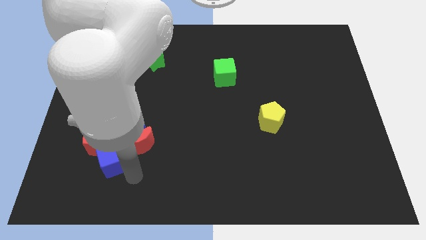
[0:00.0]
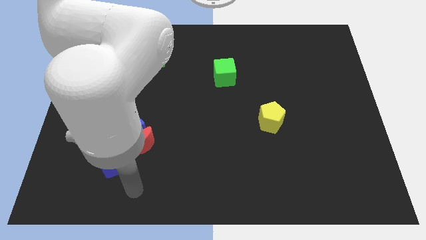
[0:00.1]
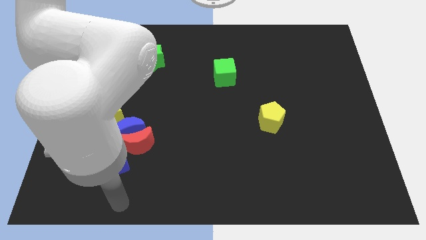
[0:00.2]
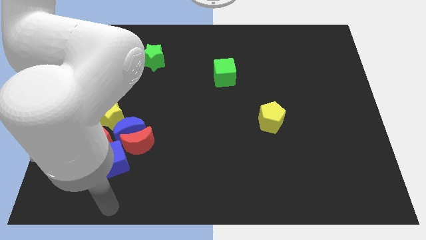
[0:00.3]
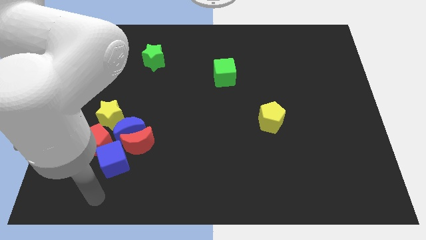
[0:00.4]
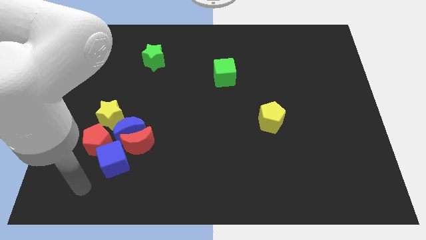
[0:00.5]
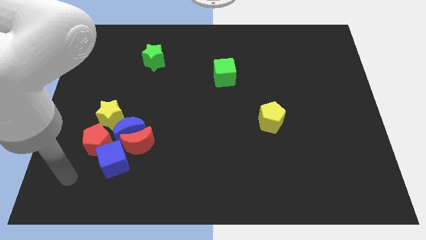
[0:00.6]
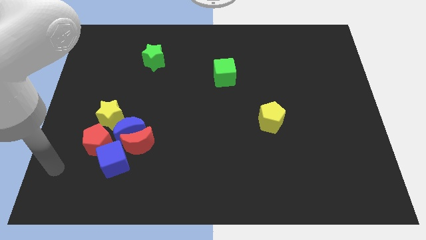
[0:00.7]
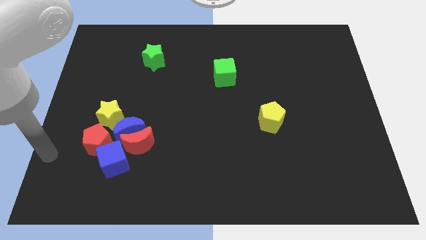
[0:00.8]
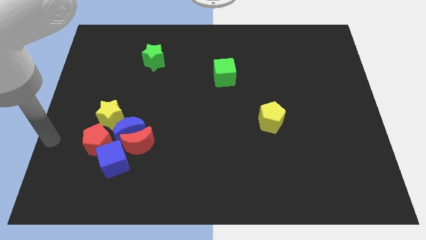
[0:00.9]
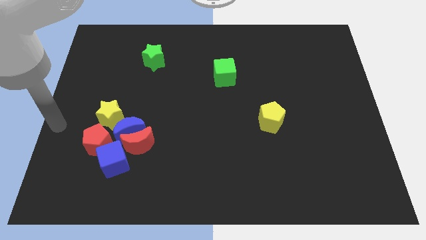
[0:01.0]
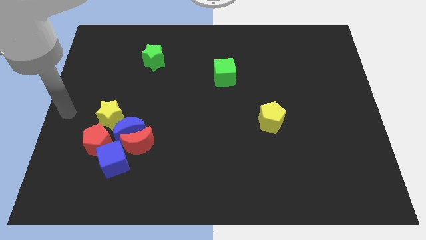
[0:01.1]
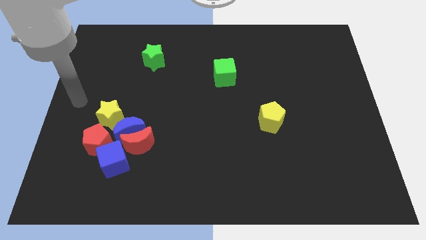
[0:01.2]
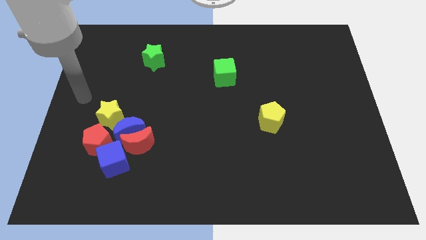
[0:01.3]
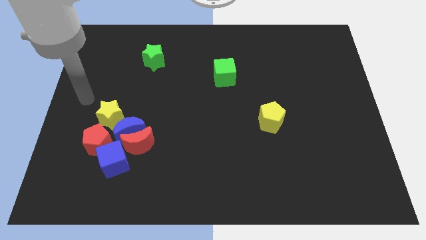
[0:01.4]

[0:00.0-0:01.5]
move your arm away from the blue cube

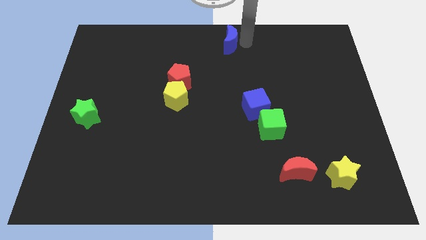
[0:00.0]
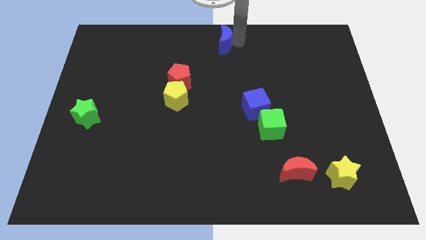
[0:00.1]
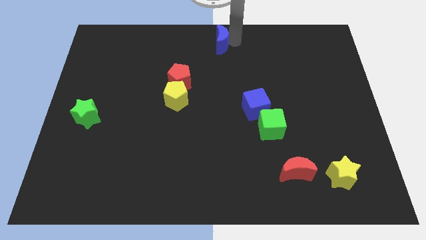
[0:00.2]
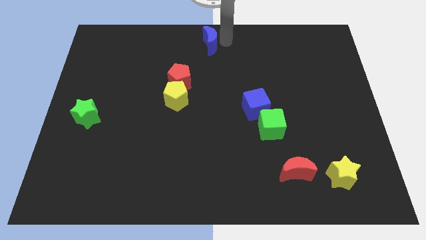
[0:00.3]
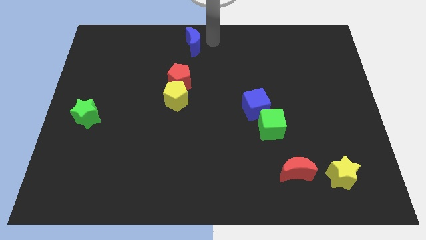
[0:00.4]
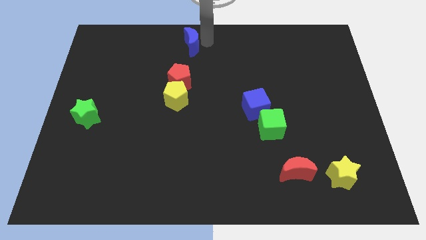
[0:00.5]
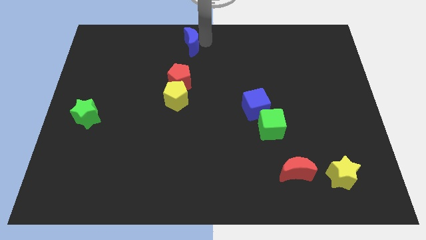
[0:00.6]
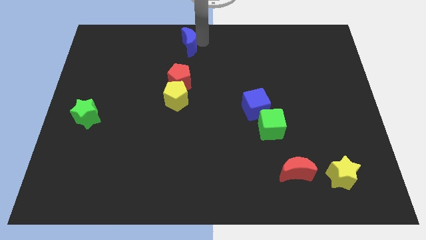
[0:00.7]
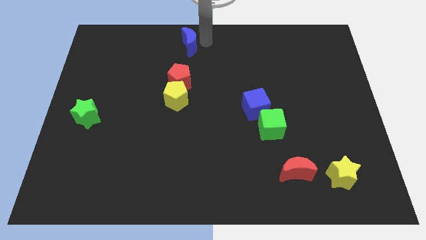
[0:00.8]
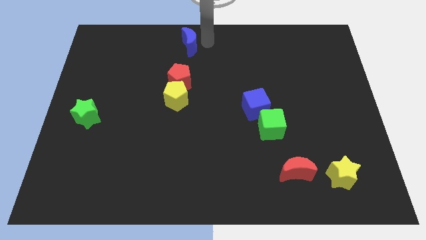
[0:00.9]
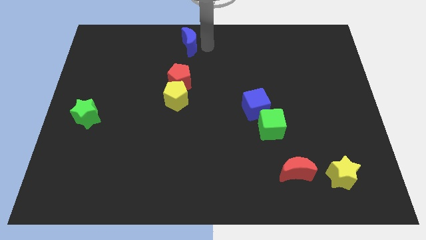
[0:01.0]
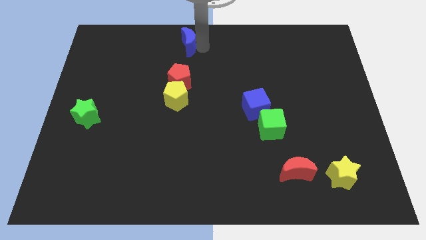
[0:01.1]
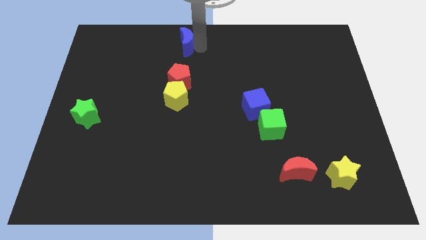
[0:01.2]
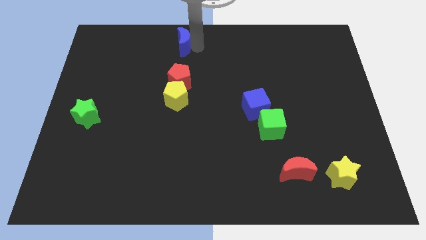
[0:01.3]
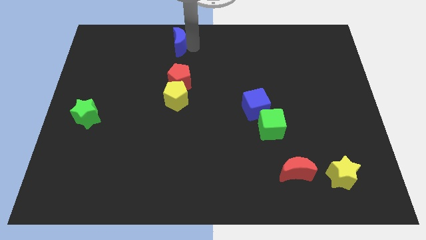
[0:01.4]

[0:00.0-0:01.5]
move the blue crescent to the top side of the red pentagon

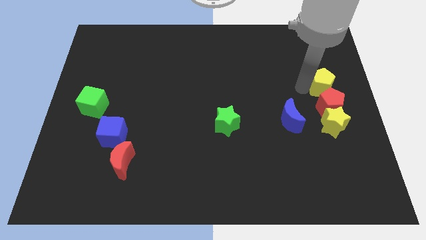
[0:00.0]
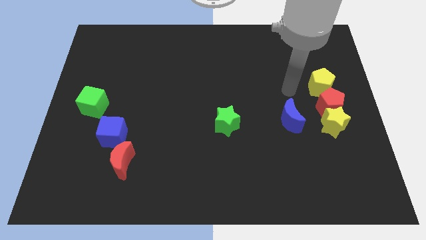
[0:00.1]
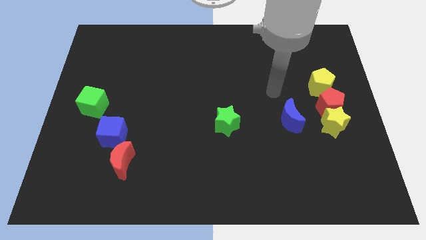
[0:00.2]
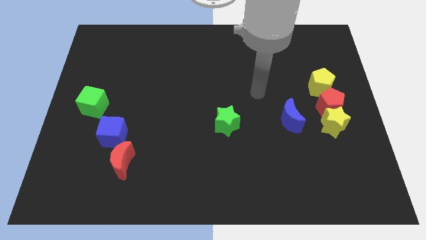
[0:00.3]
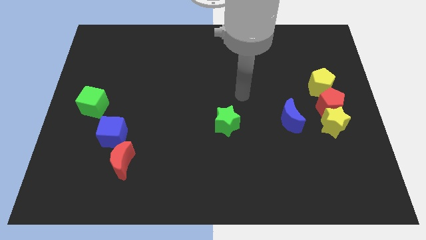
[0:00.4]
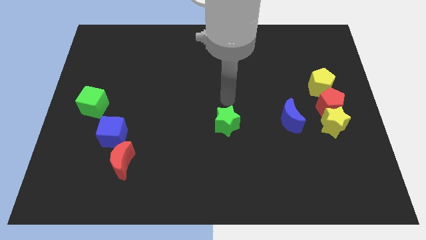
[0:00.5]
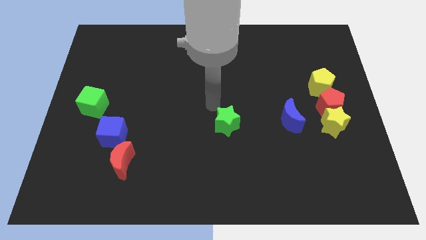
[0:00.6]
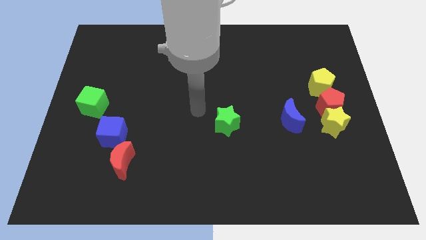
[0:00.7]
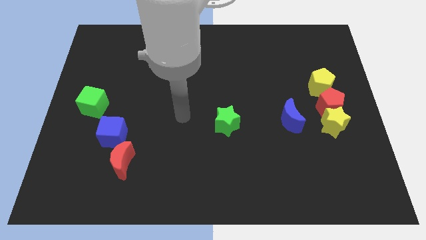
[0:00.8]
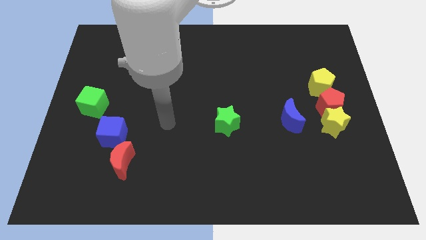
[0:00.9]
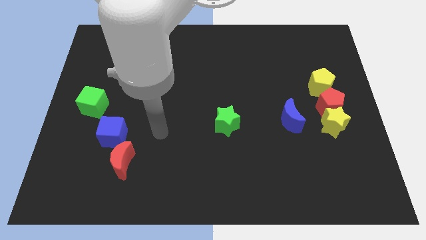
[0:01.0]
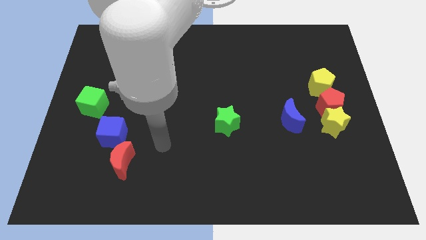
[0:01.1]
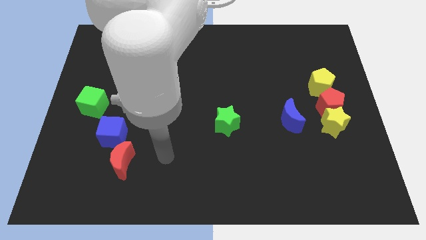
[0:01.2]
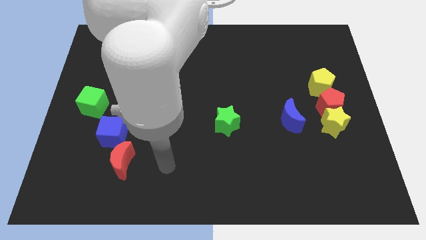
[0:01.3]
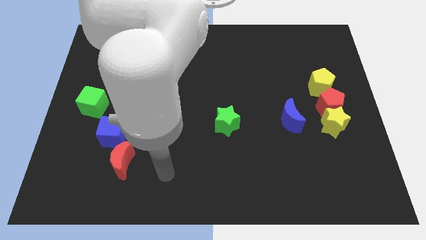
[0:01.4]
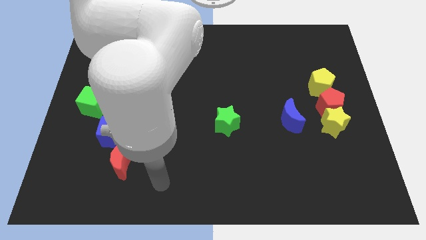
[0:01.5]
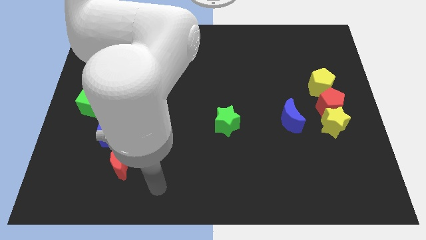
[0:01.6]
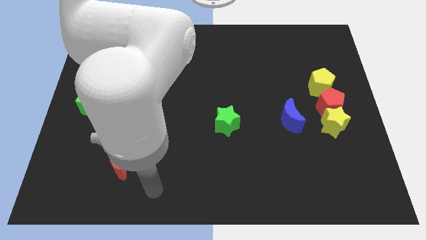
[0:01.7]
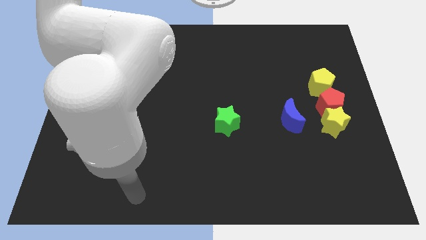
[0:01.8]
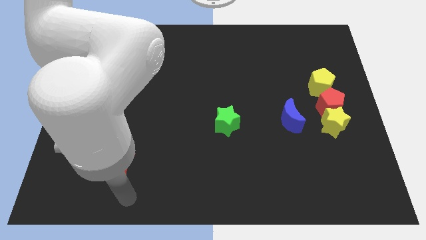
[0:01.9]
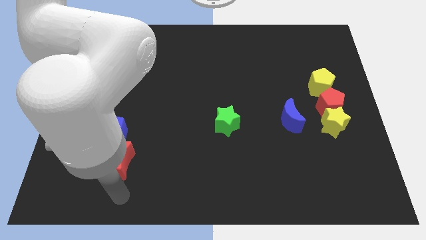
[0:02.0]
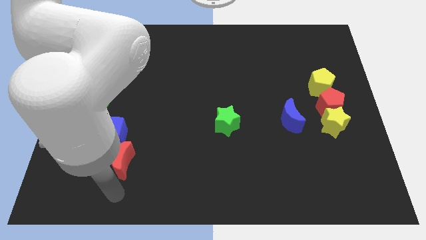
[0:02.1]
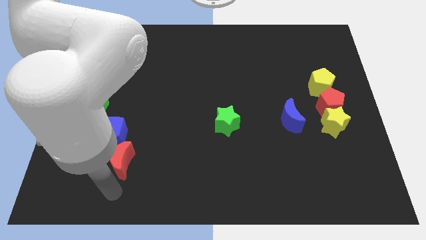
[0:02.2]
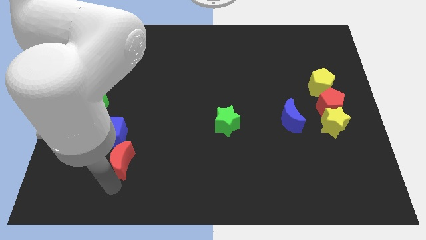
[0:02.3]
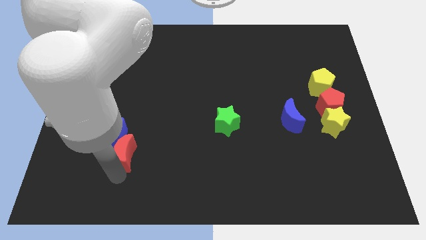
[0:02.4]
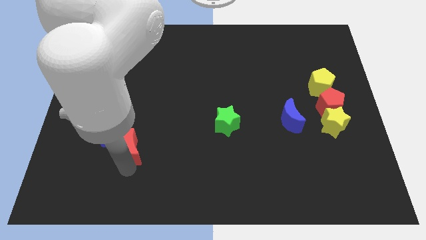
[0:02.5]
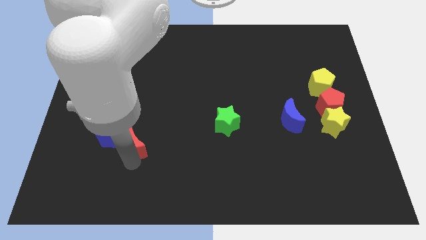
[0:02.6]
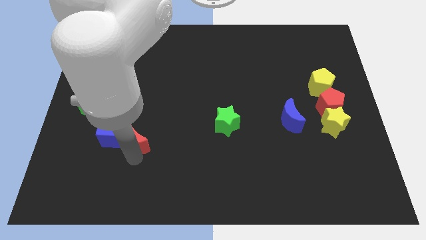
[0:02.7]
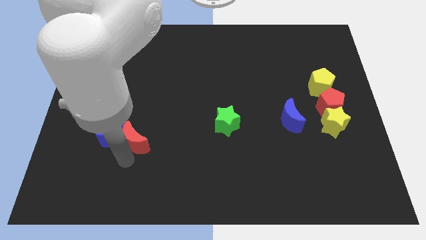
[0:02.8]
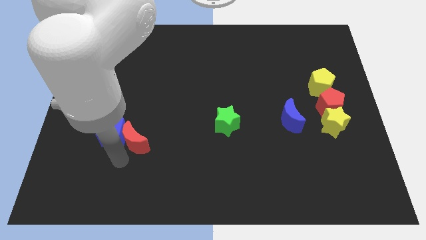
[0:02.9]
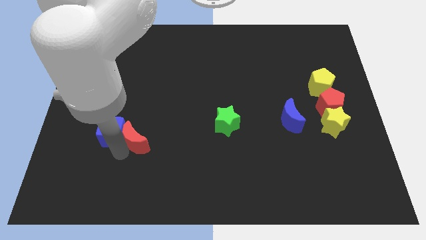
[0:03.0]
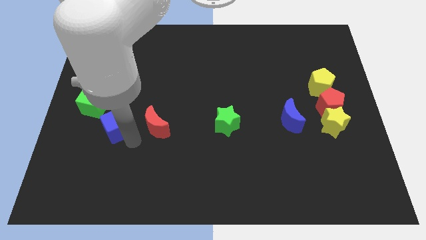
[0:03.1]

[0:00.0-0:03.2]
move the red crescent to the right side of the blue cube

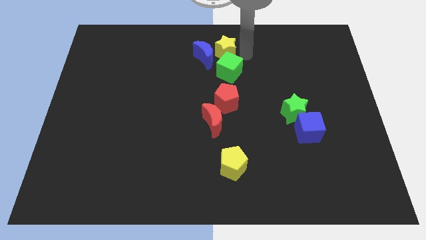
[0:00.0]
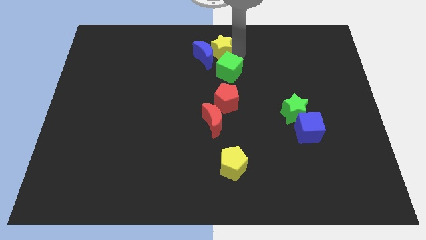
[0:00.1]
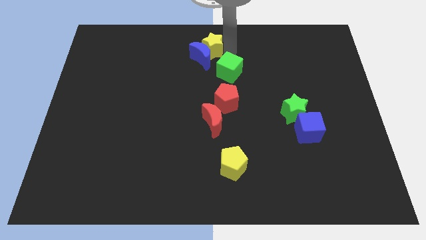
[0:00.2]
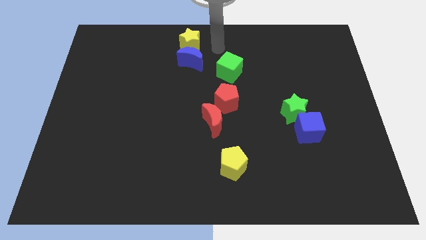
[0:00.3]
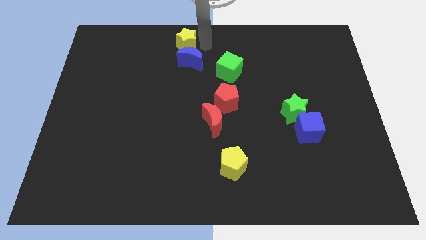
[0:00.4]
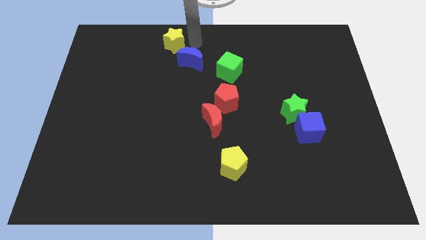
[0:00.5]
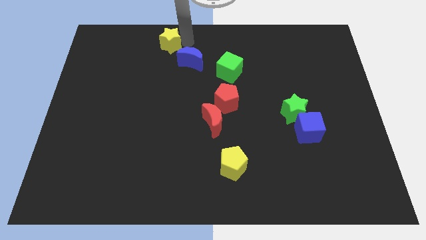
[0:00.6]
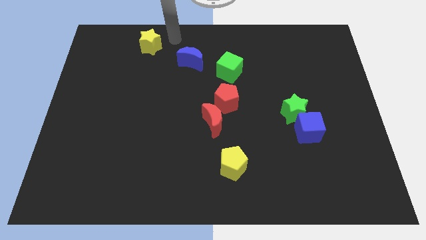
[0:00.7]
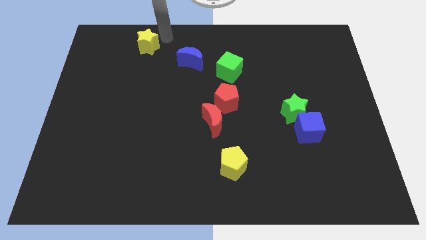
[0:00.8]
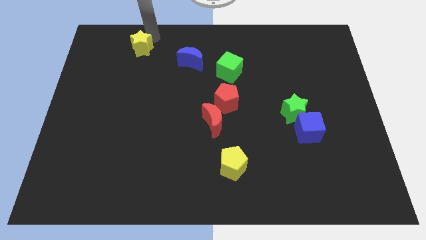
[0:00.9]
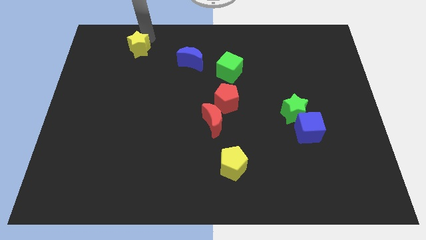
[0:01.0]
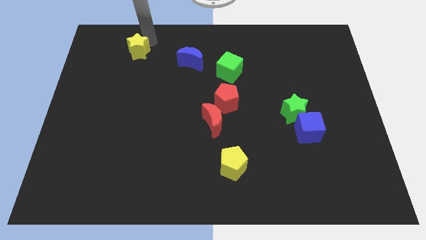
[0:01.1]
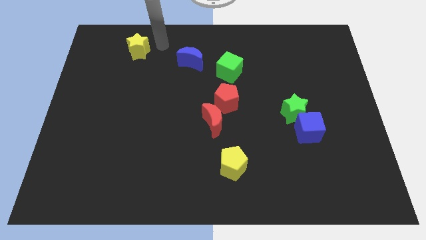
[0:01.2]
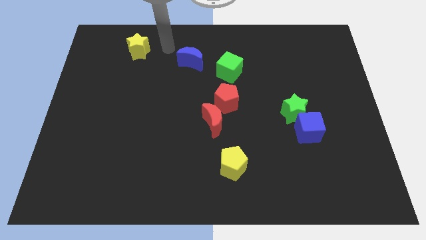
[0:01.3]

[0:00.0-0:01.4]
place the yellow star left to the blue moon

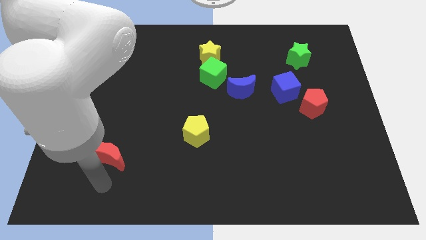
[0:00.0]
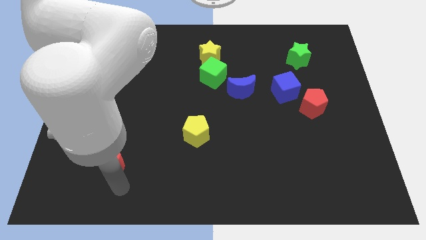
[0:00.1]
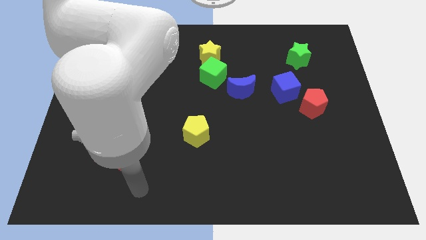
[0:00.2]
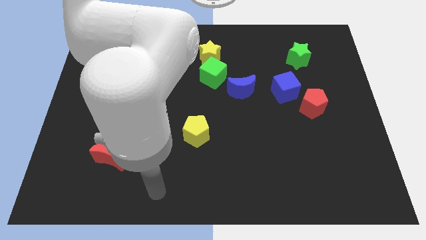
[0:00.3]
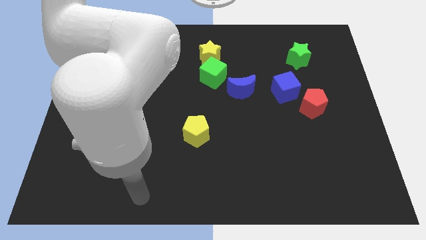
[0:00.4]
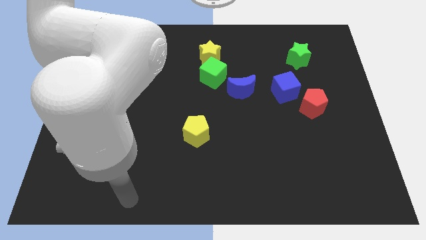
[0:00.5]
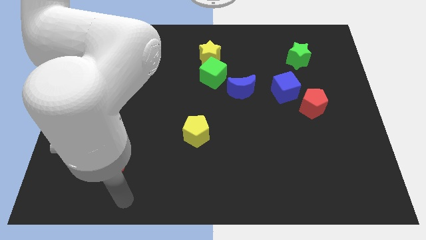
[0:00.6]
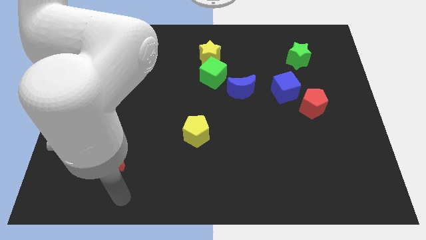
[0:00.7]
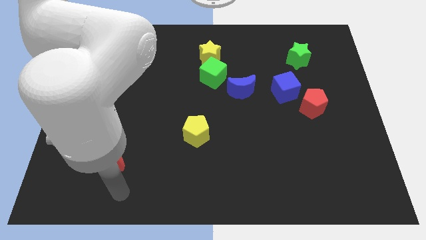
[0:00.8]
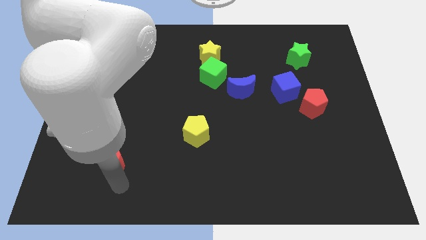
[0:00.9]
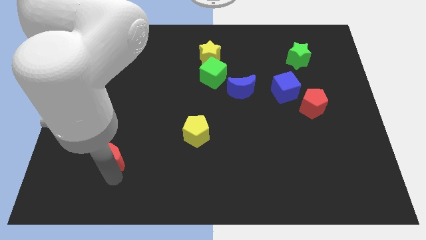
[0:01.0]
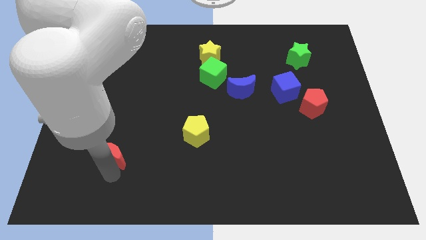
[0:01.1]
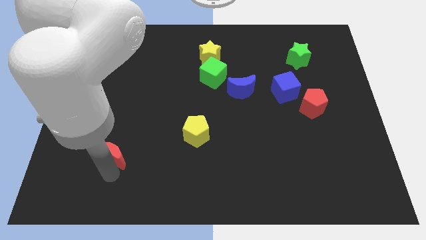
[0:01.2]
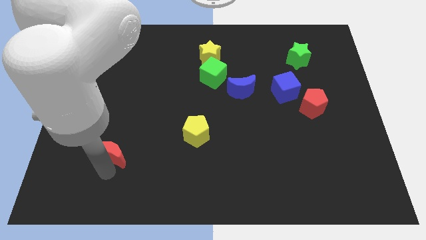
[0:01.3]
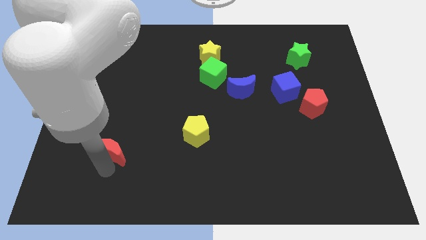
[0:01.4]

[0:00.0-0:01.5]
move red moon slightly upwards
